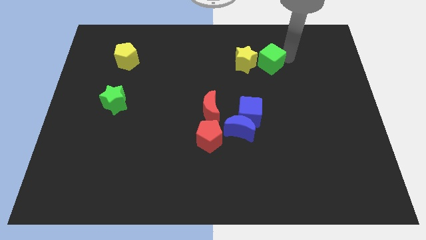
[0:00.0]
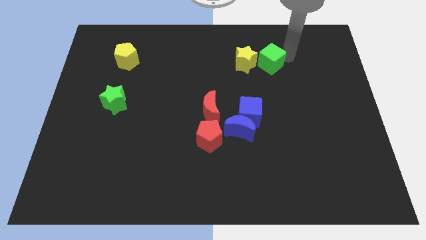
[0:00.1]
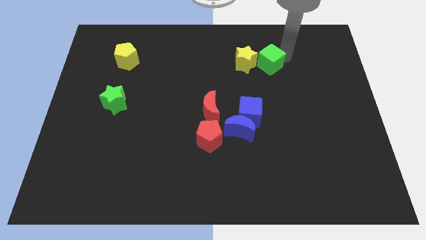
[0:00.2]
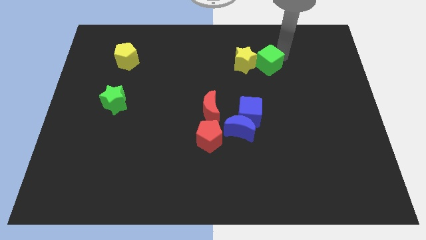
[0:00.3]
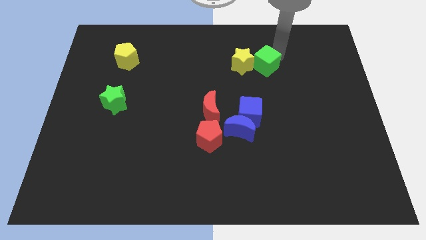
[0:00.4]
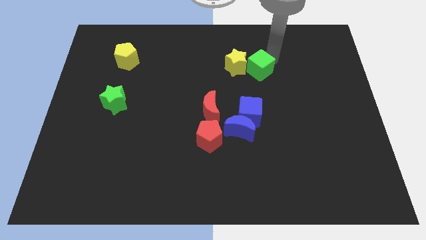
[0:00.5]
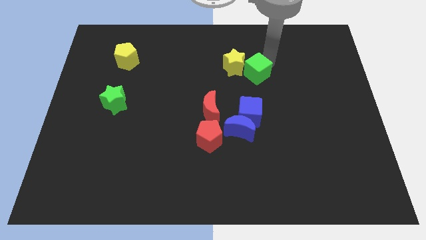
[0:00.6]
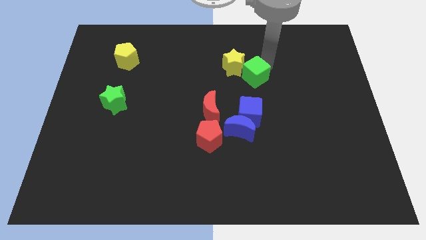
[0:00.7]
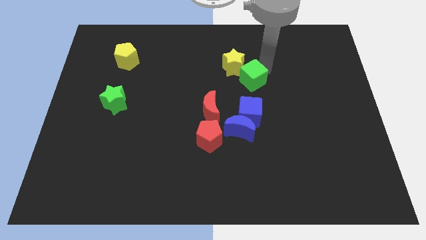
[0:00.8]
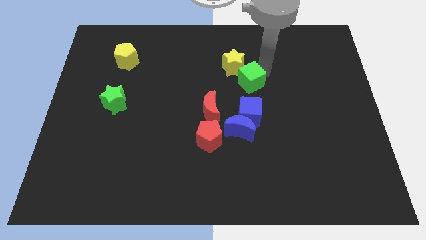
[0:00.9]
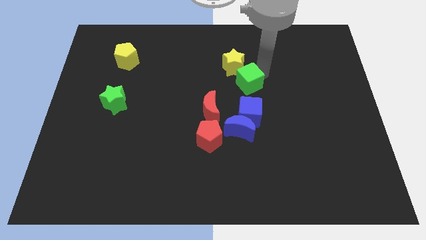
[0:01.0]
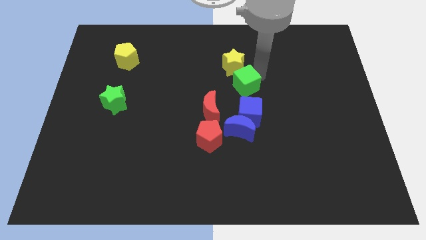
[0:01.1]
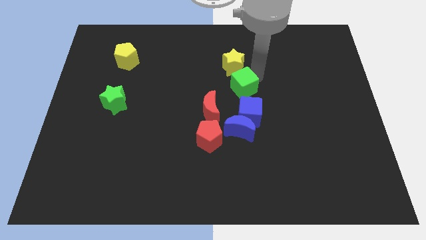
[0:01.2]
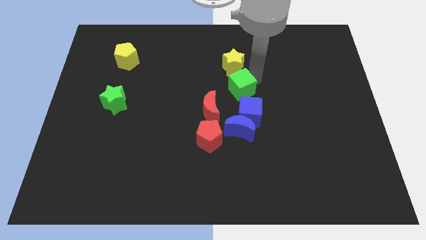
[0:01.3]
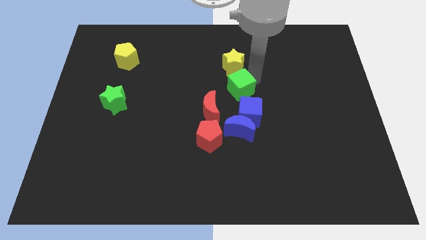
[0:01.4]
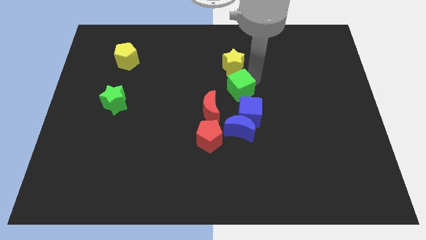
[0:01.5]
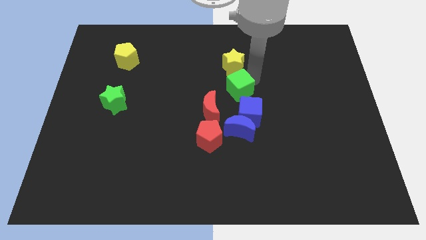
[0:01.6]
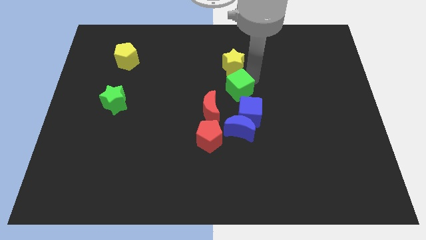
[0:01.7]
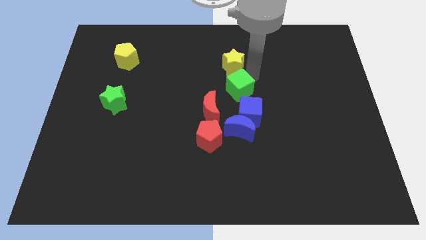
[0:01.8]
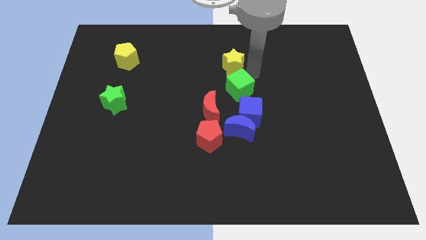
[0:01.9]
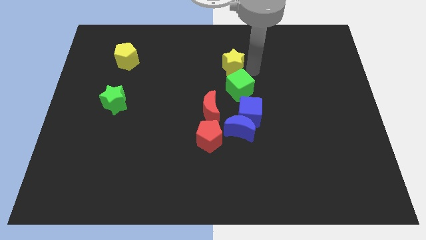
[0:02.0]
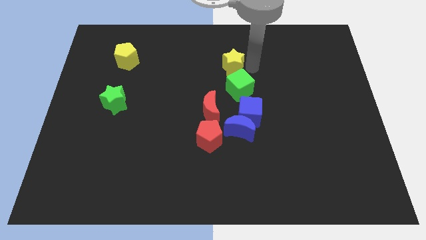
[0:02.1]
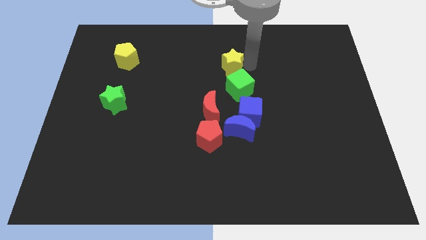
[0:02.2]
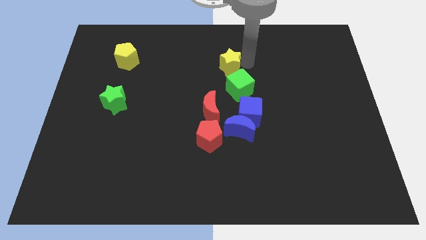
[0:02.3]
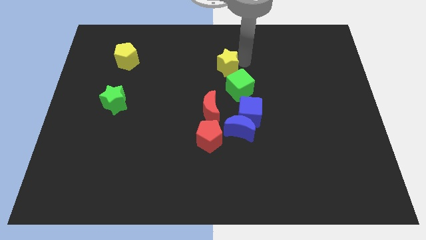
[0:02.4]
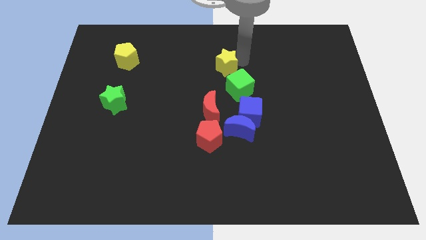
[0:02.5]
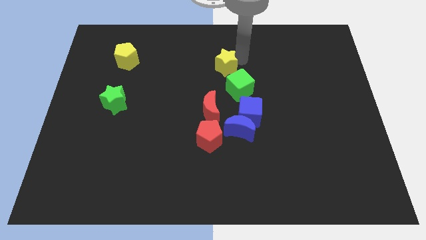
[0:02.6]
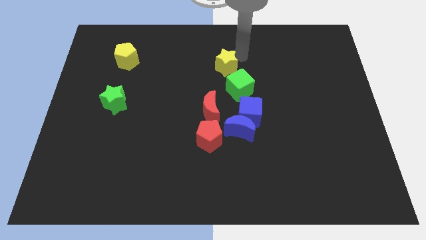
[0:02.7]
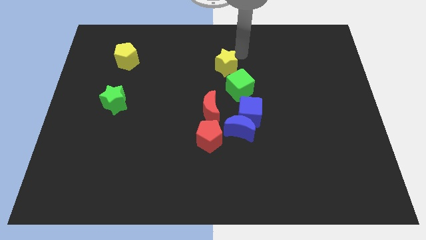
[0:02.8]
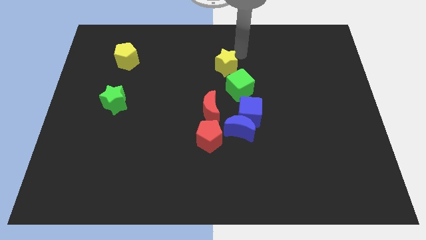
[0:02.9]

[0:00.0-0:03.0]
push green cube diagonally to blue cube

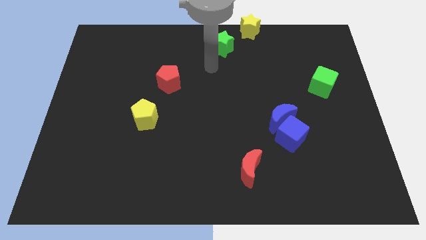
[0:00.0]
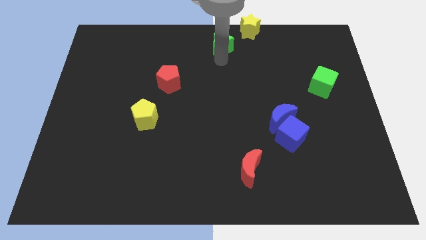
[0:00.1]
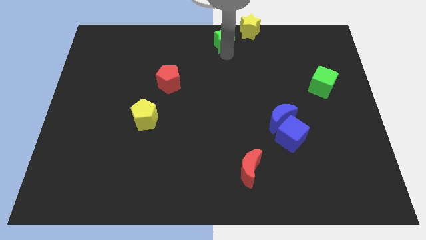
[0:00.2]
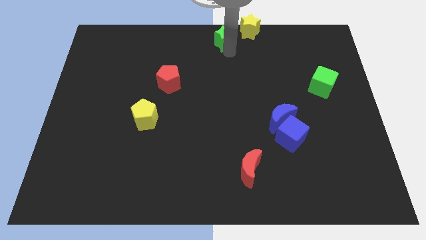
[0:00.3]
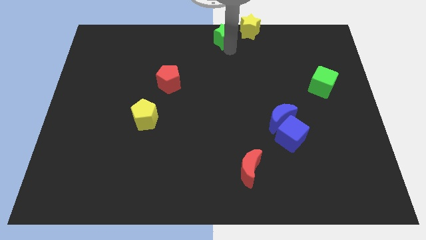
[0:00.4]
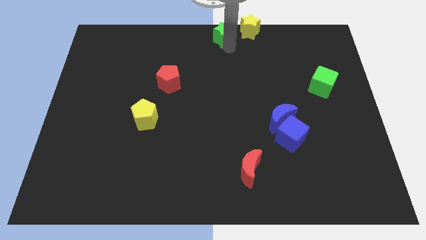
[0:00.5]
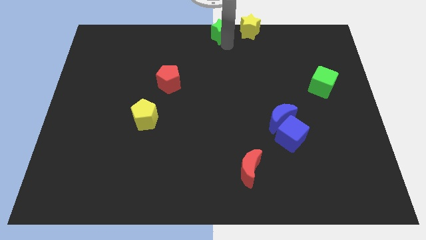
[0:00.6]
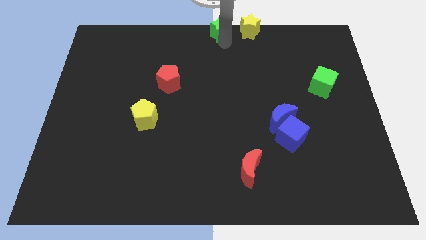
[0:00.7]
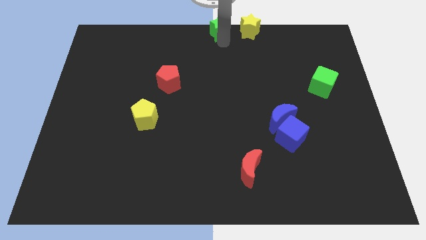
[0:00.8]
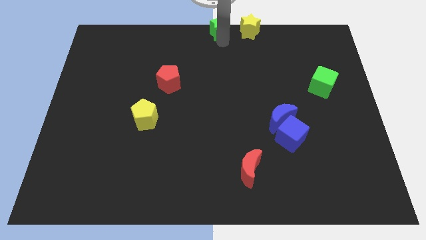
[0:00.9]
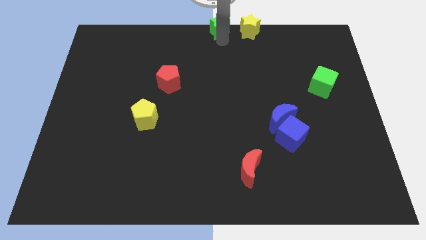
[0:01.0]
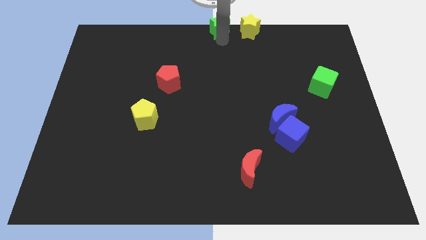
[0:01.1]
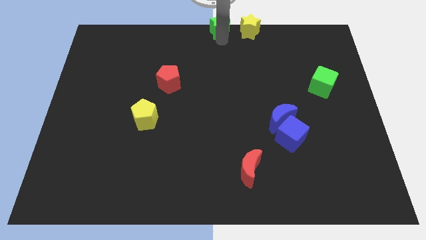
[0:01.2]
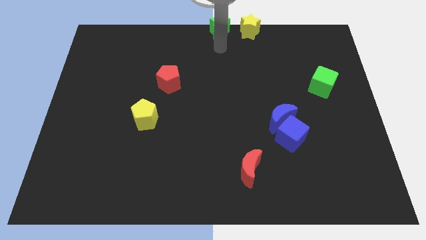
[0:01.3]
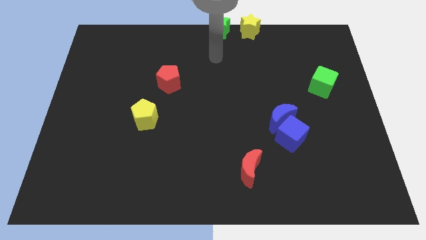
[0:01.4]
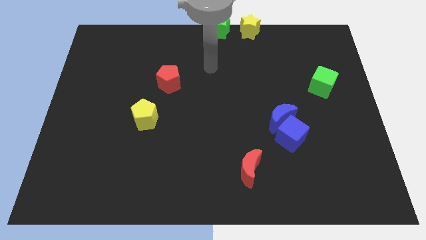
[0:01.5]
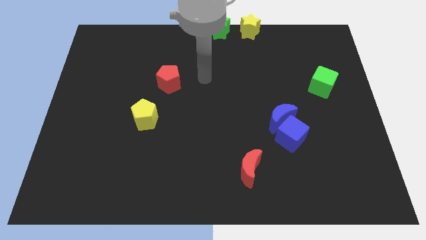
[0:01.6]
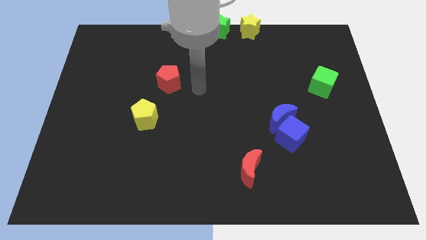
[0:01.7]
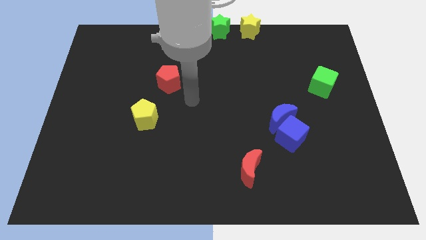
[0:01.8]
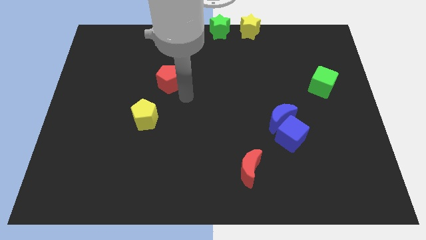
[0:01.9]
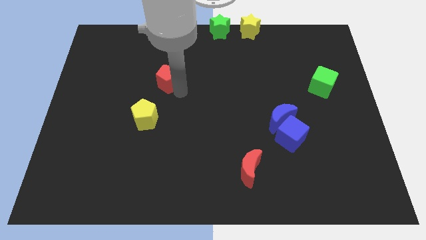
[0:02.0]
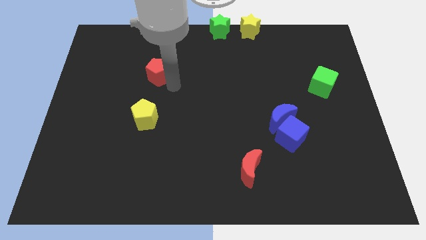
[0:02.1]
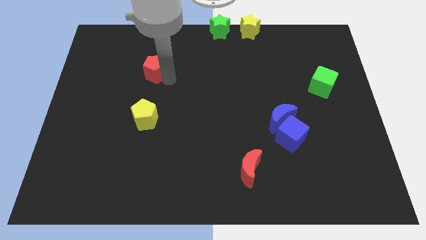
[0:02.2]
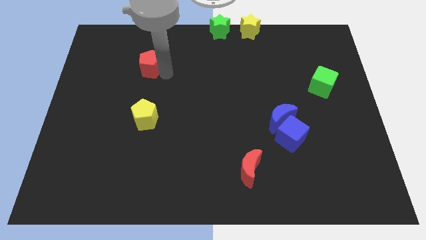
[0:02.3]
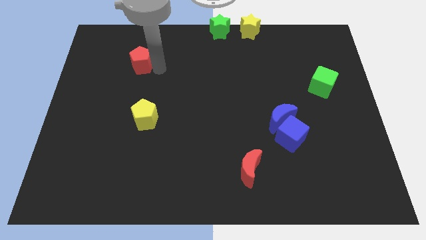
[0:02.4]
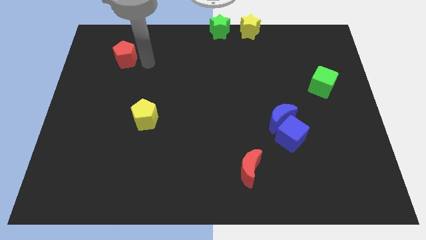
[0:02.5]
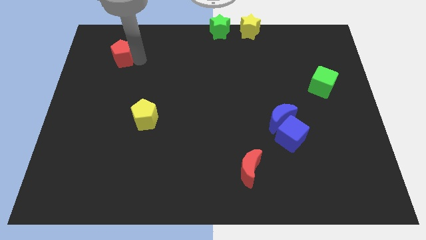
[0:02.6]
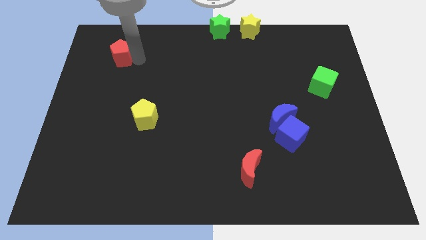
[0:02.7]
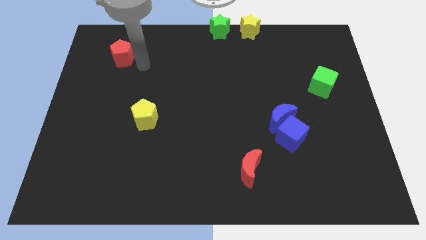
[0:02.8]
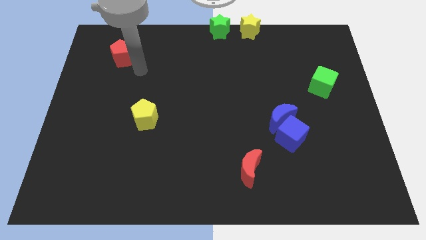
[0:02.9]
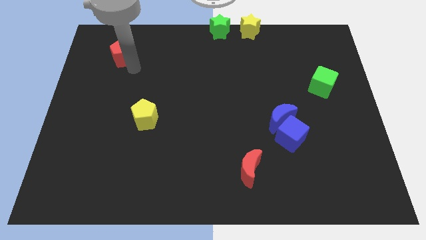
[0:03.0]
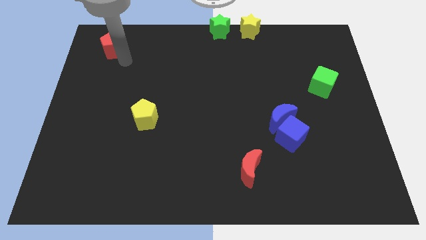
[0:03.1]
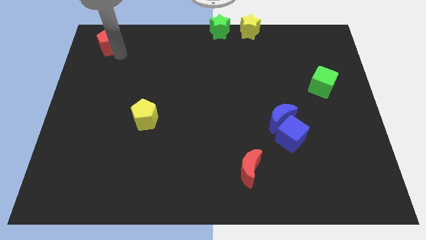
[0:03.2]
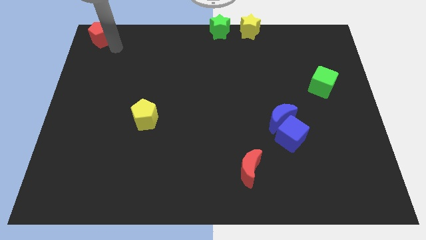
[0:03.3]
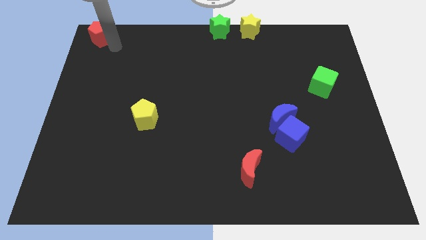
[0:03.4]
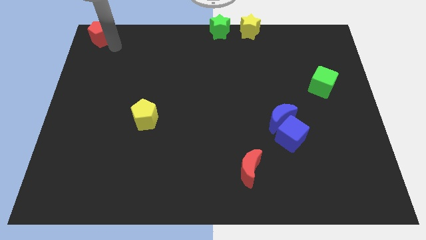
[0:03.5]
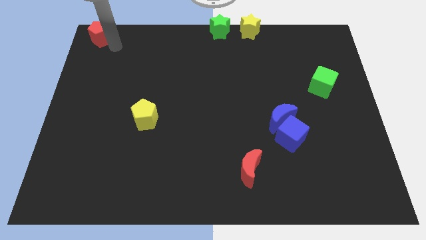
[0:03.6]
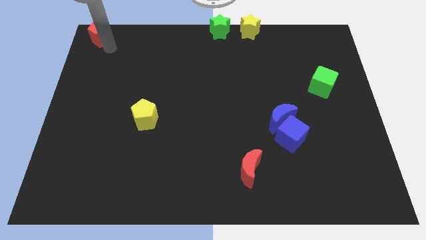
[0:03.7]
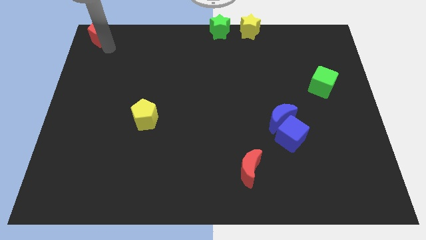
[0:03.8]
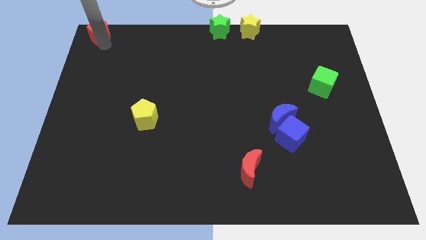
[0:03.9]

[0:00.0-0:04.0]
drag red pentagon towards top left corner of the board

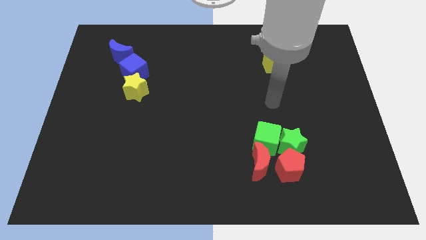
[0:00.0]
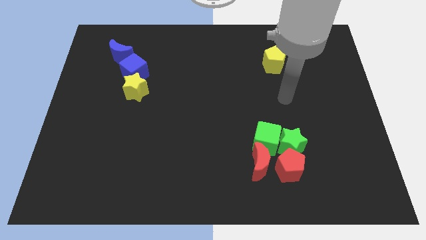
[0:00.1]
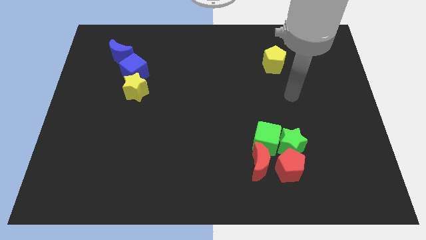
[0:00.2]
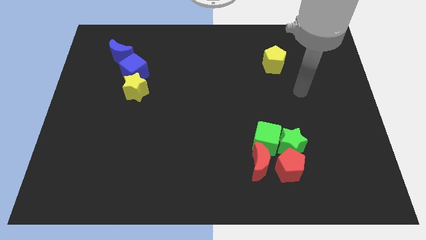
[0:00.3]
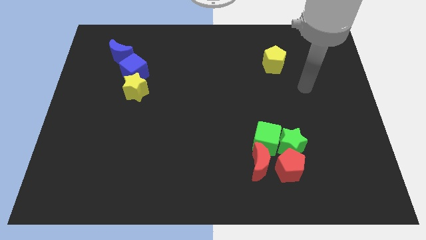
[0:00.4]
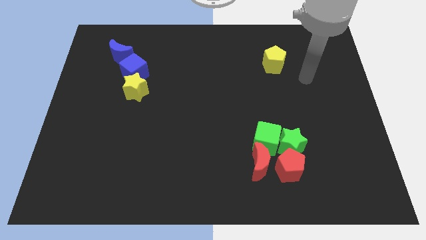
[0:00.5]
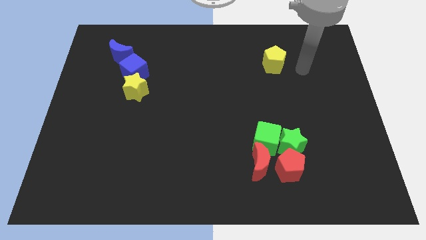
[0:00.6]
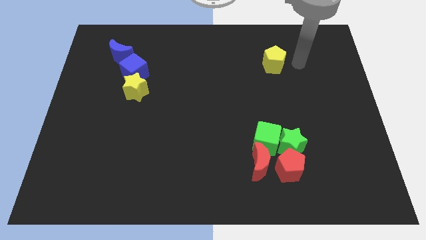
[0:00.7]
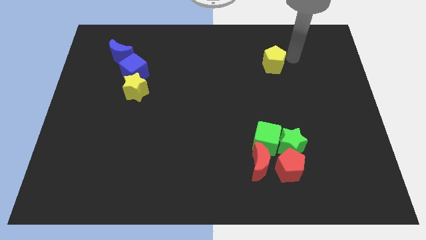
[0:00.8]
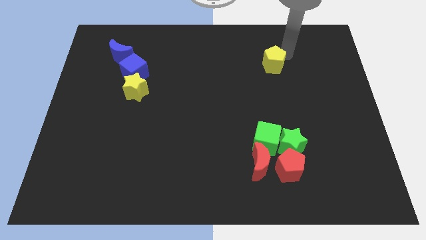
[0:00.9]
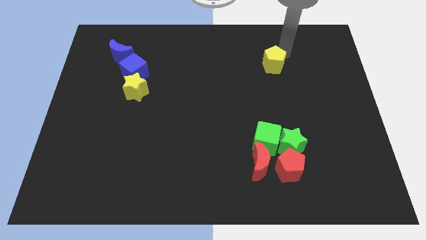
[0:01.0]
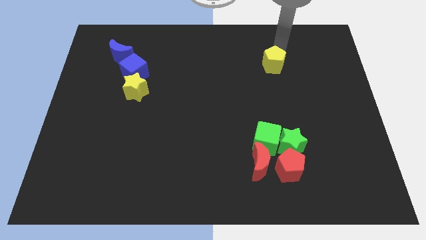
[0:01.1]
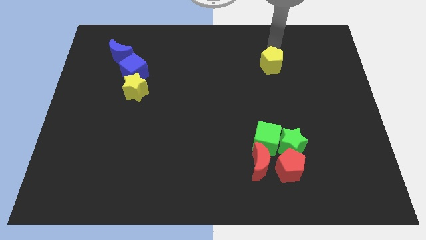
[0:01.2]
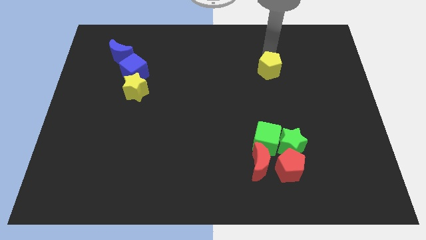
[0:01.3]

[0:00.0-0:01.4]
move your arm above the yellow pentagon

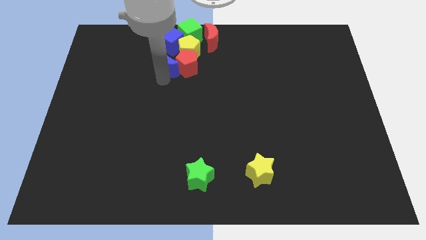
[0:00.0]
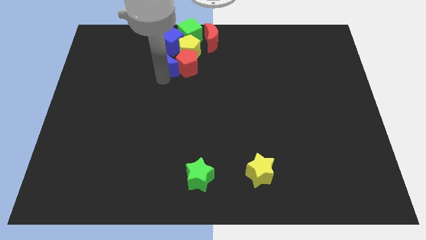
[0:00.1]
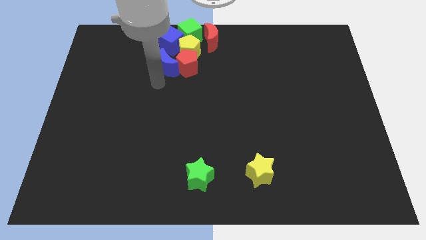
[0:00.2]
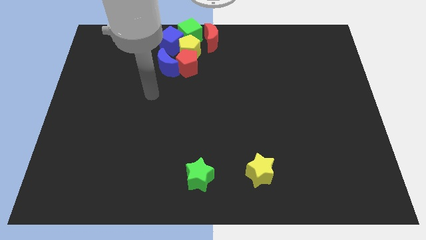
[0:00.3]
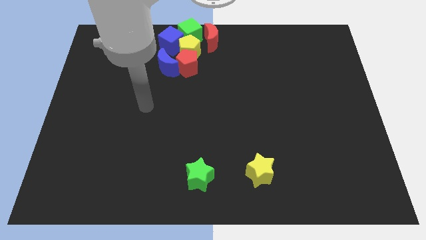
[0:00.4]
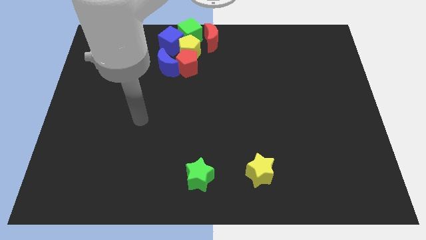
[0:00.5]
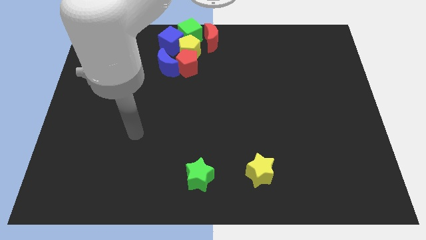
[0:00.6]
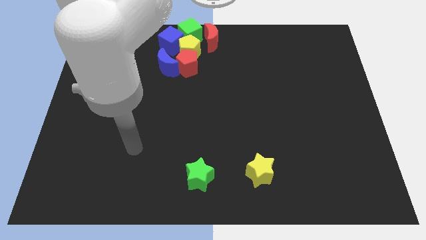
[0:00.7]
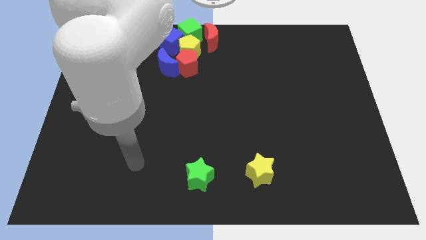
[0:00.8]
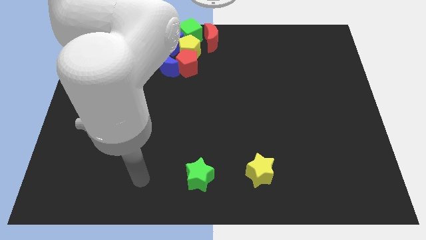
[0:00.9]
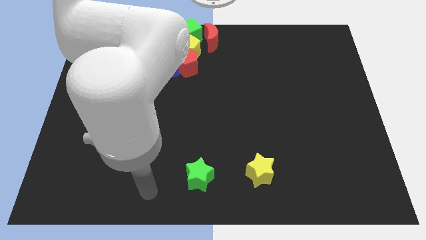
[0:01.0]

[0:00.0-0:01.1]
move your arm away from the blue moon
